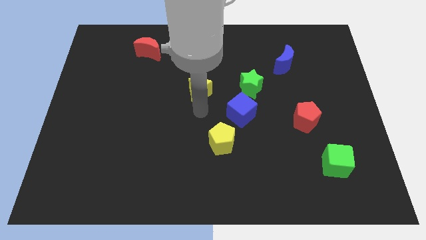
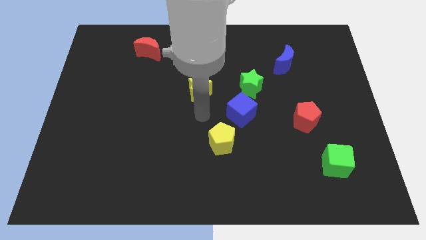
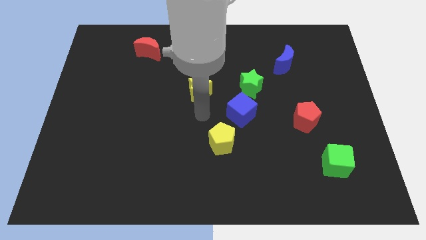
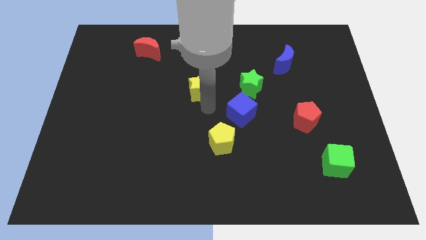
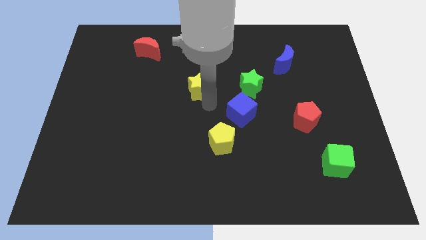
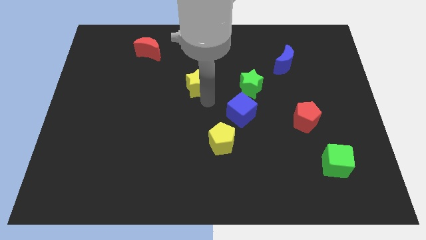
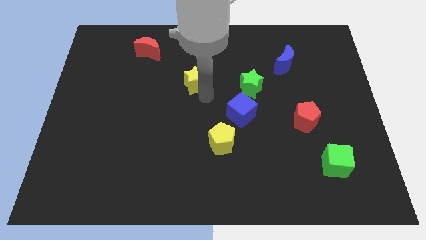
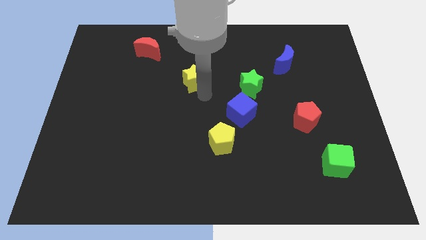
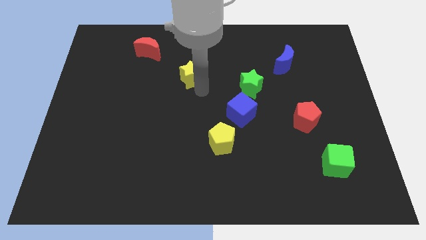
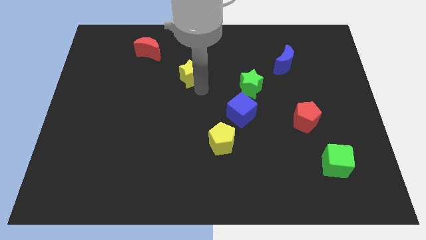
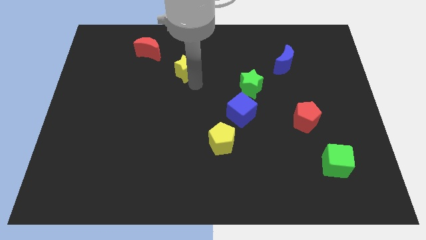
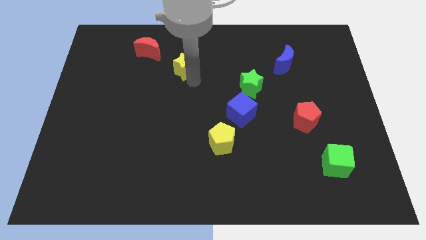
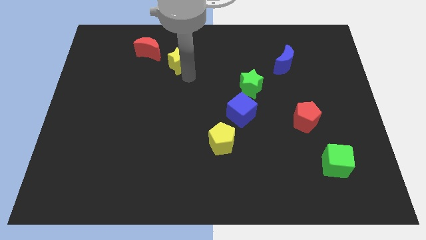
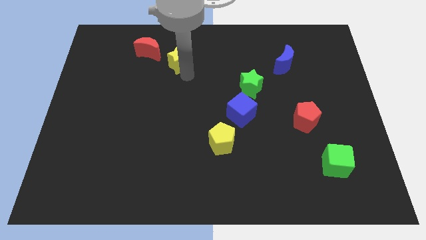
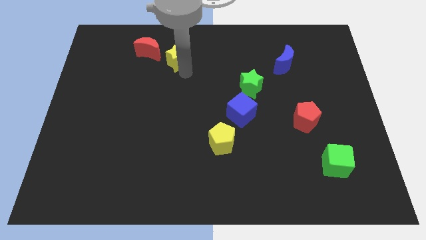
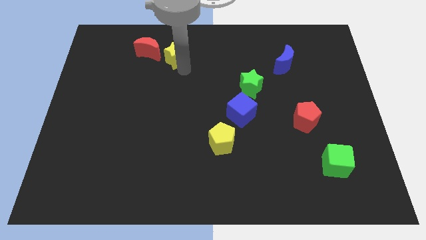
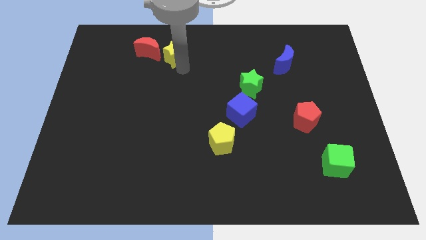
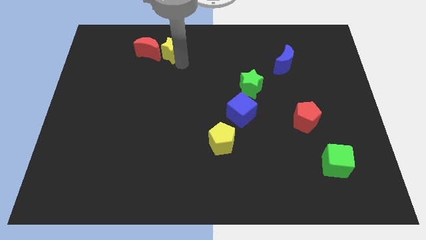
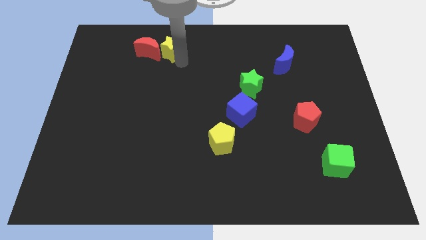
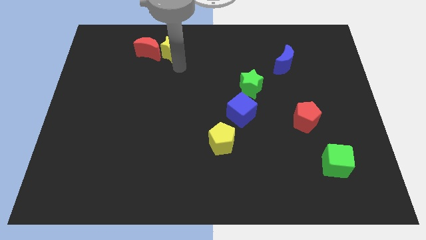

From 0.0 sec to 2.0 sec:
push the yellow star to the right of the red crescent

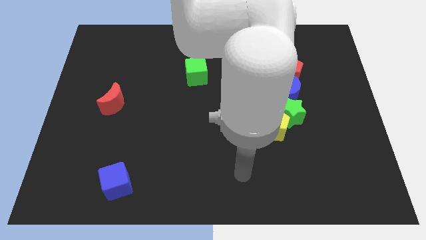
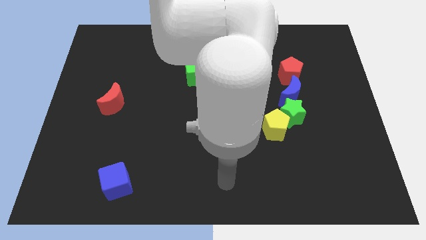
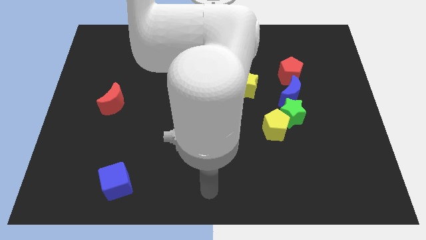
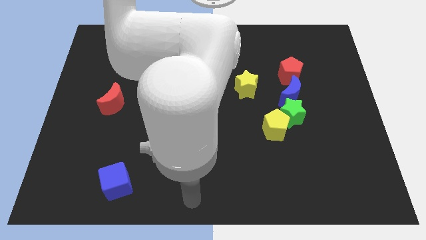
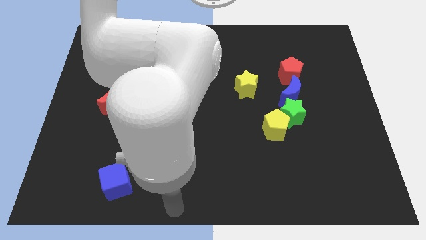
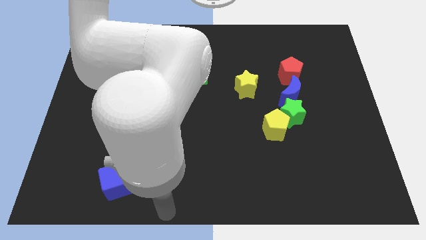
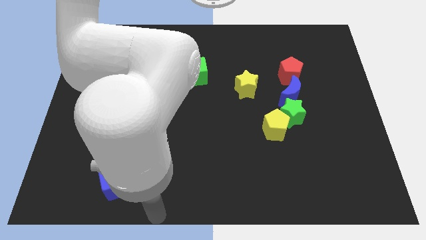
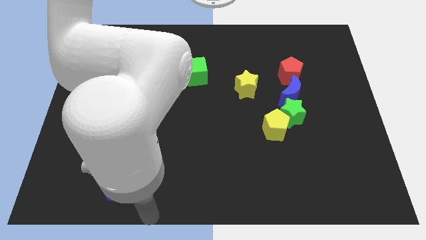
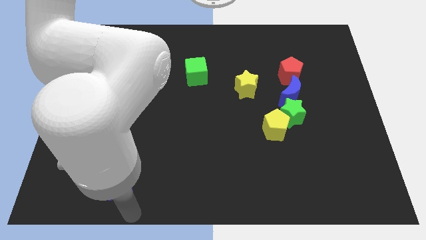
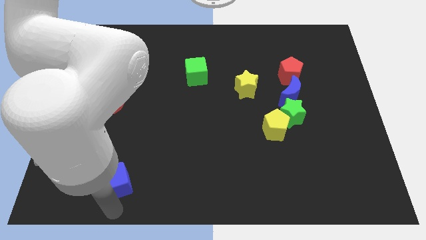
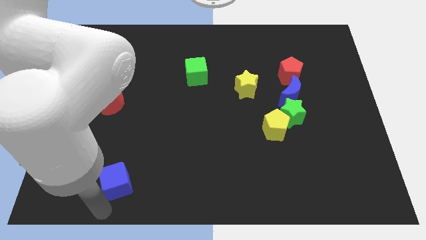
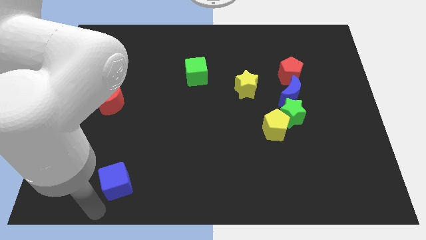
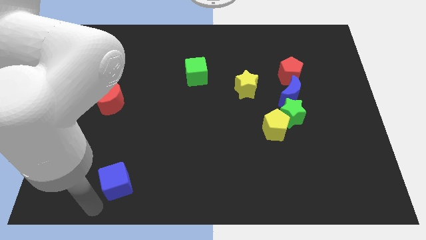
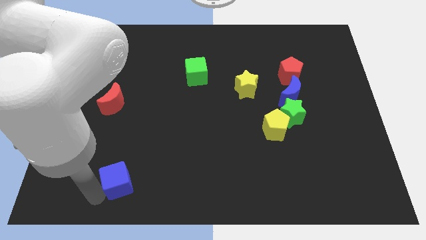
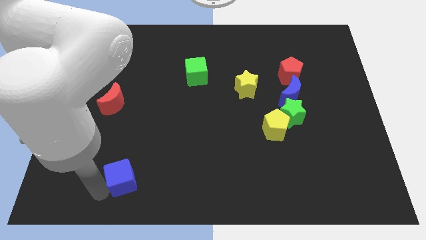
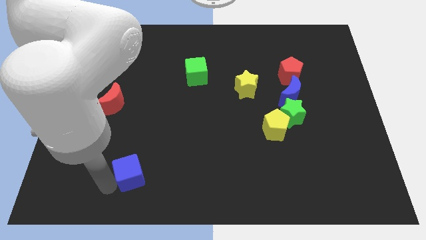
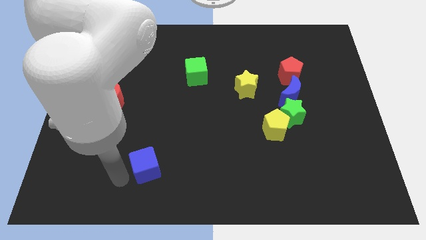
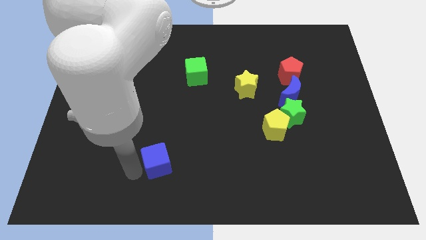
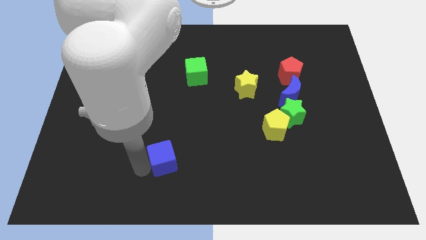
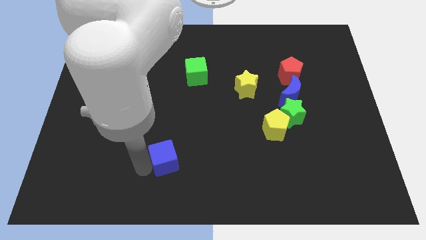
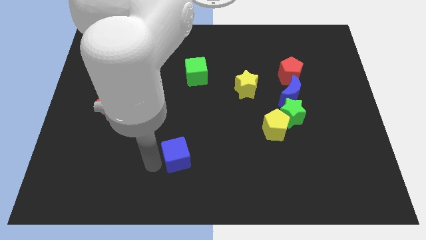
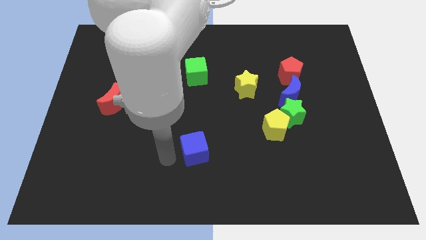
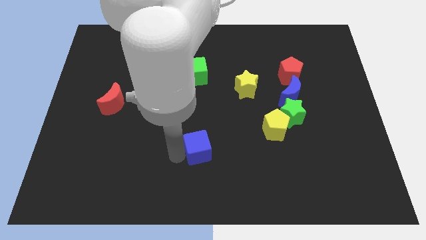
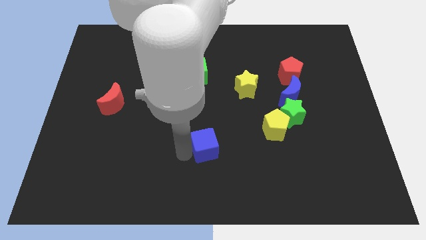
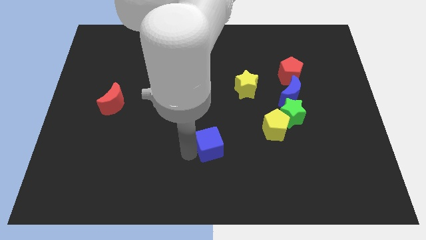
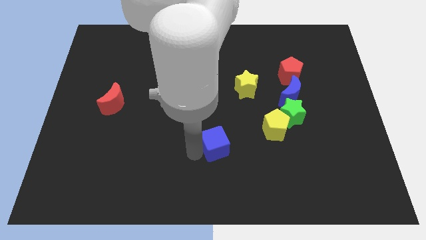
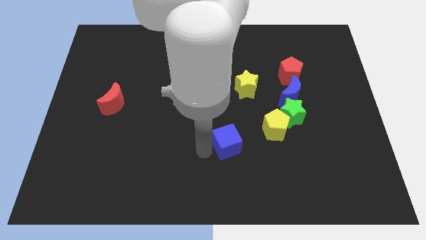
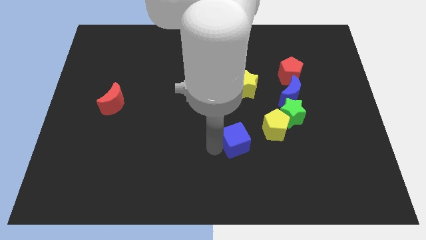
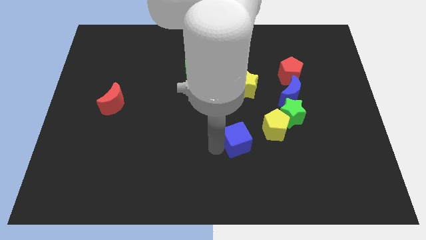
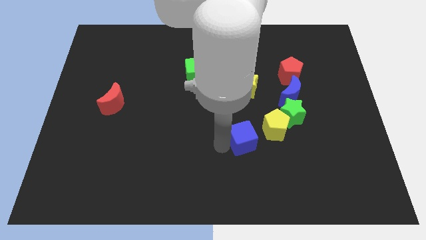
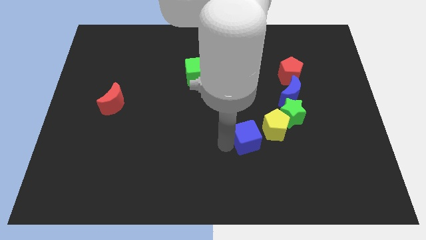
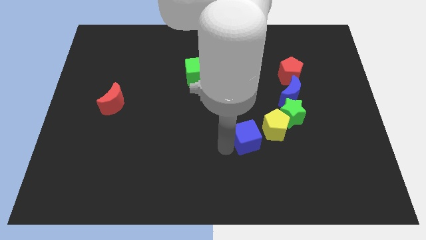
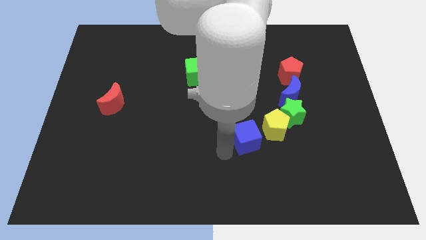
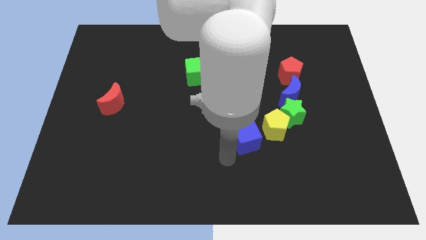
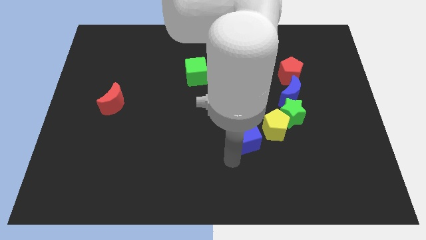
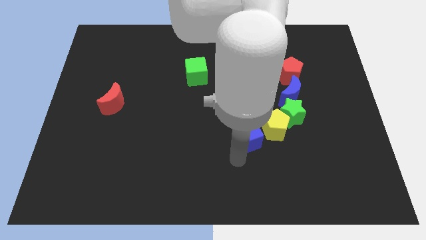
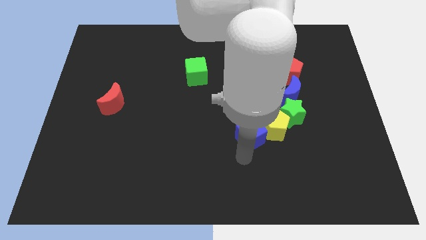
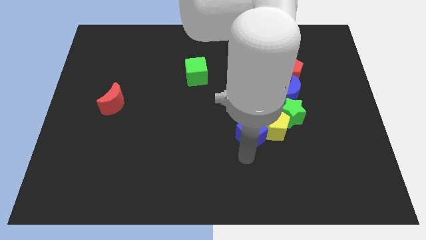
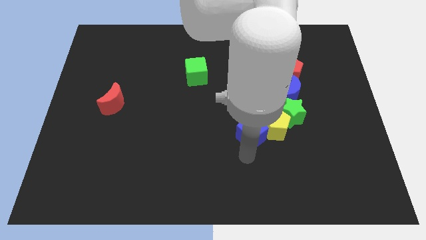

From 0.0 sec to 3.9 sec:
push blue cube to center

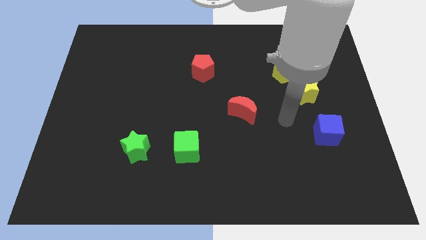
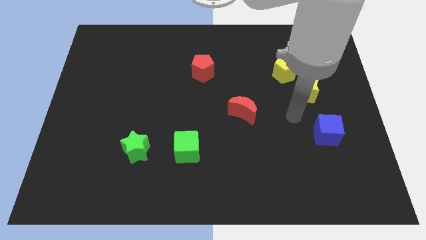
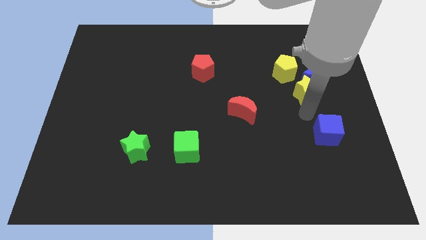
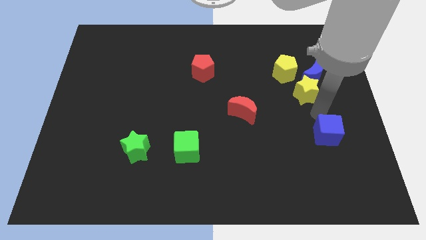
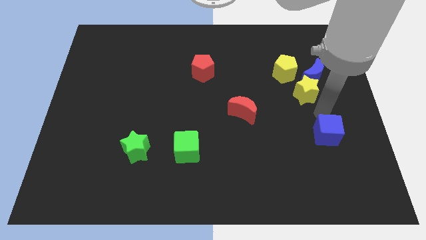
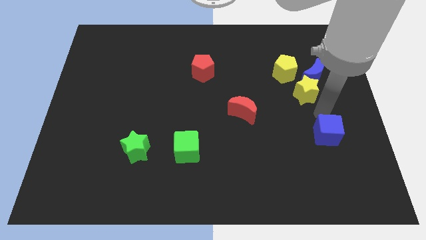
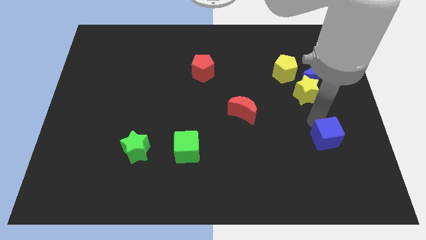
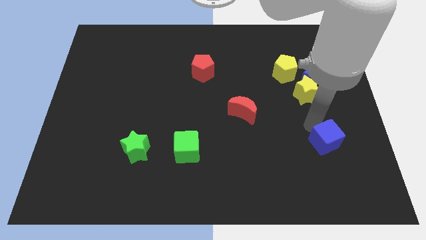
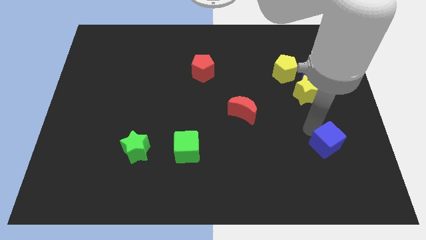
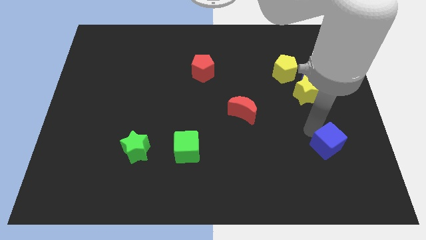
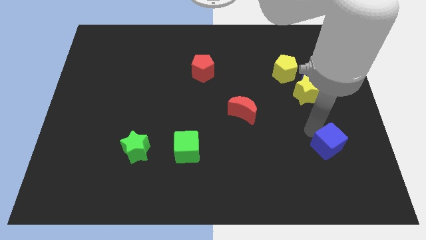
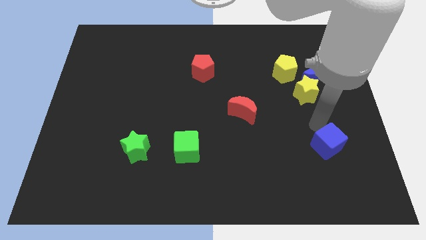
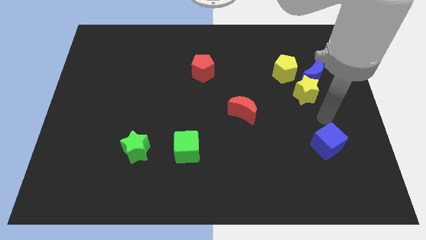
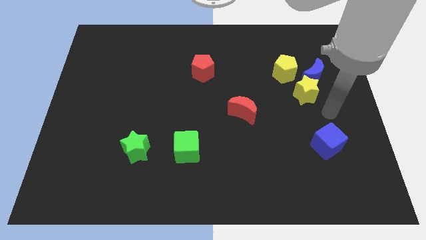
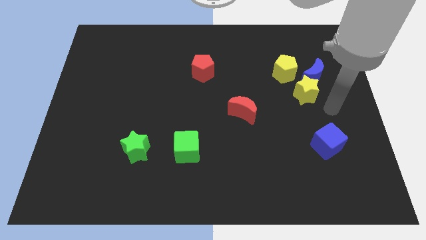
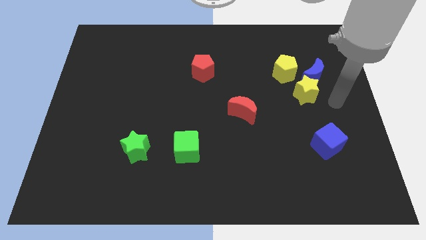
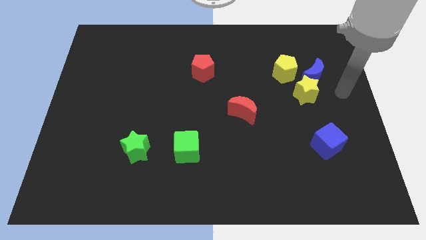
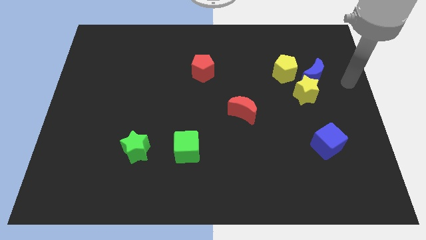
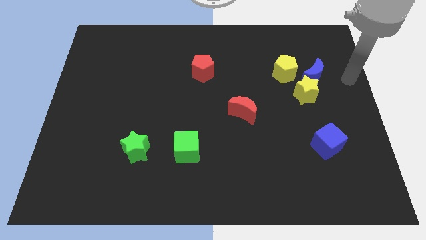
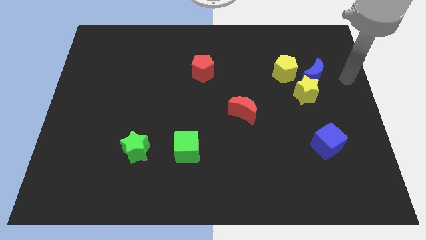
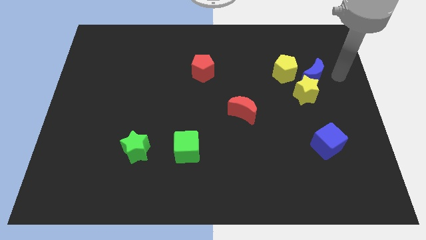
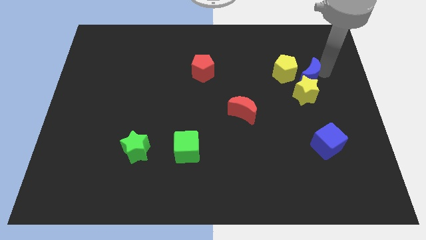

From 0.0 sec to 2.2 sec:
move the blue cube towards the bottom right of the board

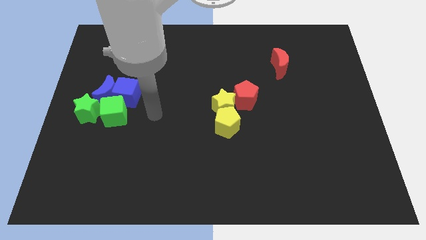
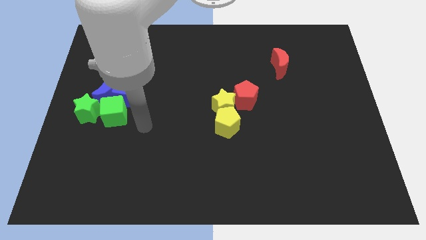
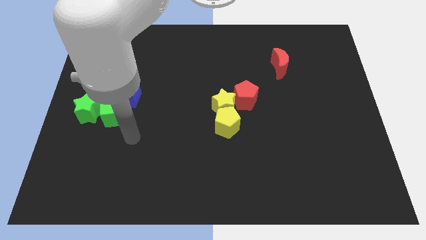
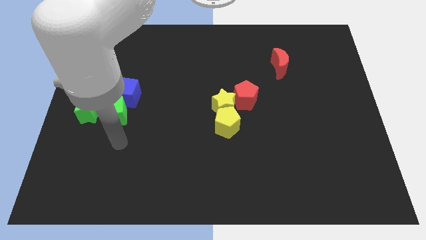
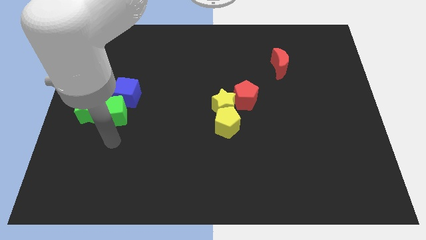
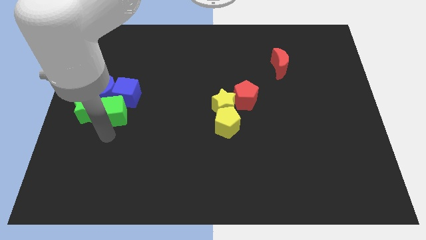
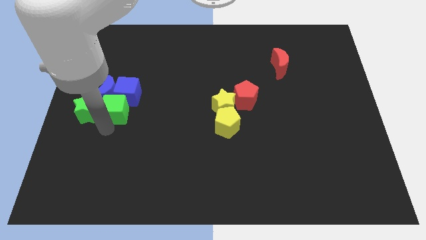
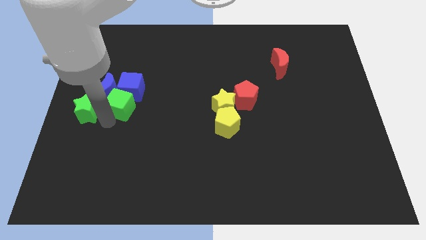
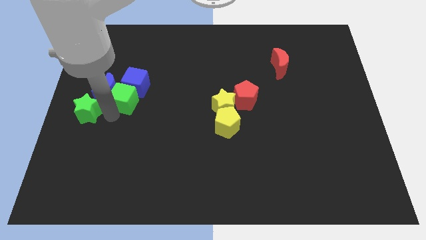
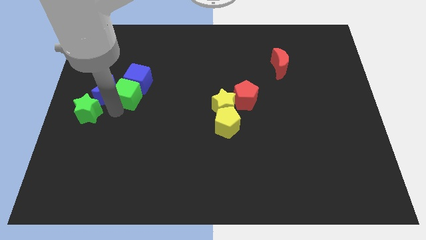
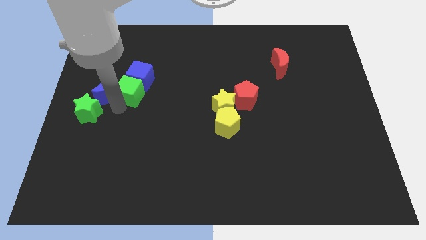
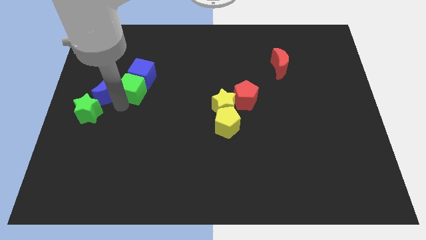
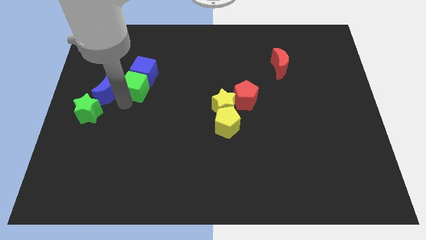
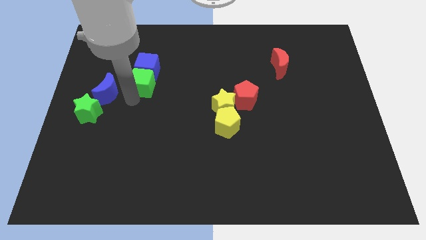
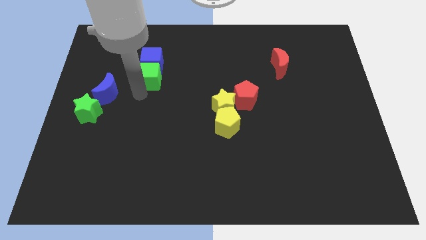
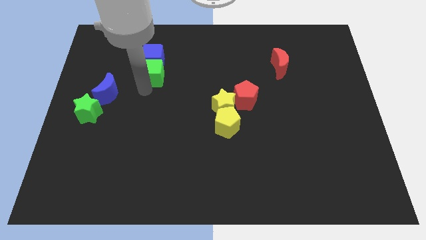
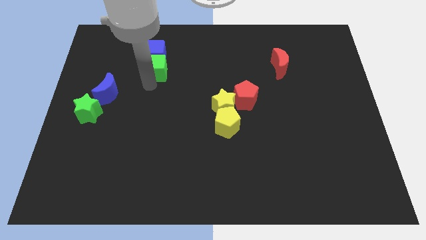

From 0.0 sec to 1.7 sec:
push green cube into blue cube
